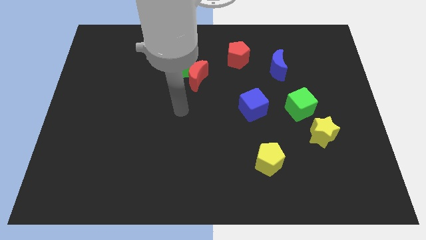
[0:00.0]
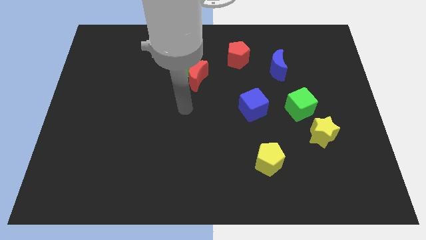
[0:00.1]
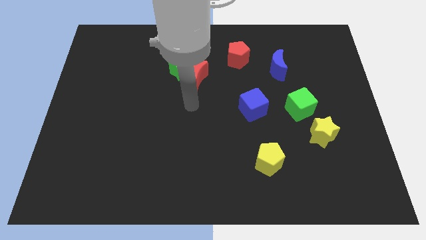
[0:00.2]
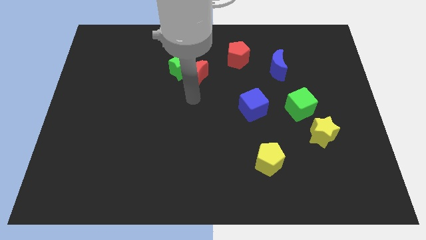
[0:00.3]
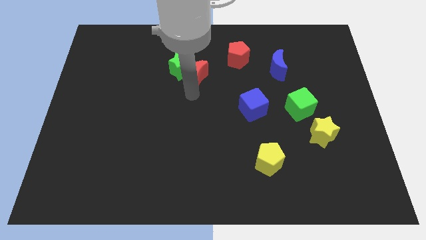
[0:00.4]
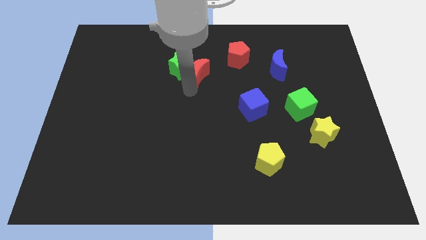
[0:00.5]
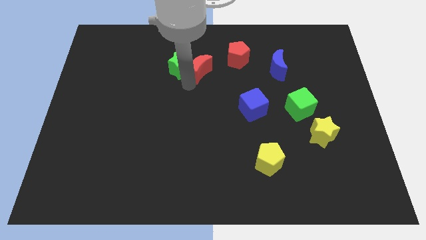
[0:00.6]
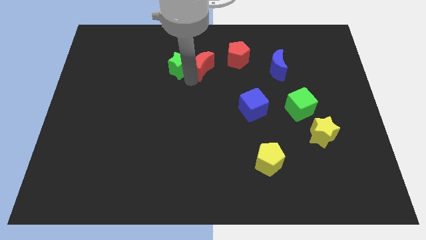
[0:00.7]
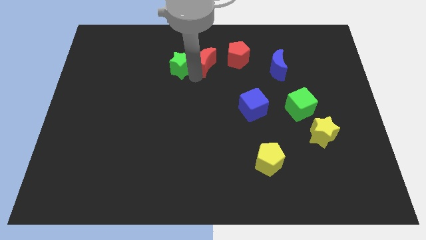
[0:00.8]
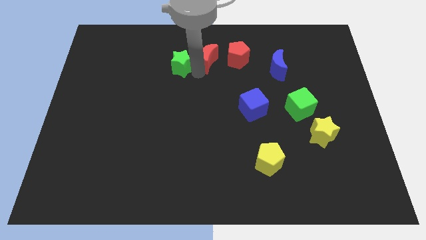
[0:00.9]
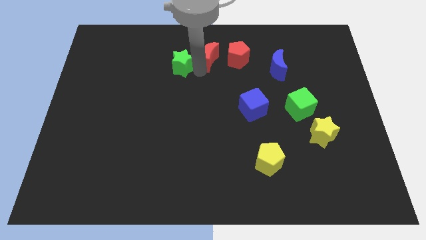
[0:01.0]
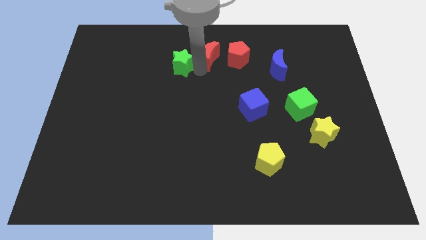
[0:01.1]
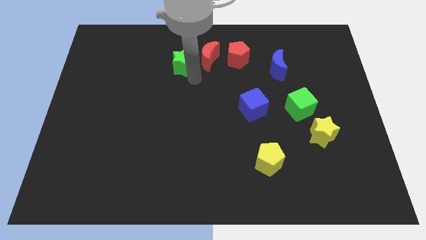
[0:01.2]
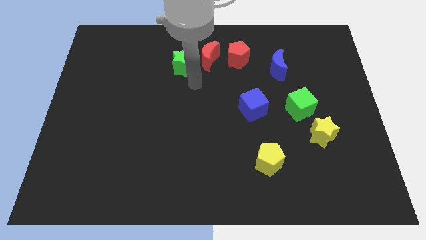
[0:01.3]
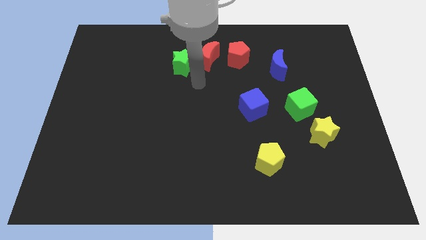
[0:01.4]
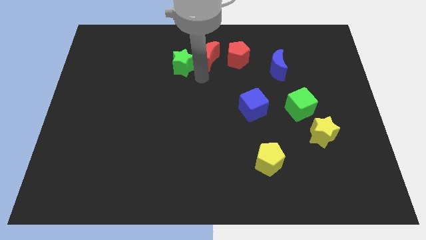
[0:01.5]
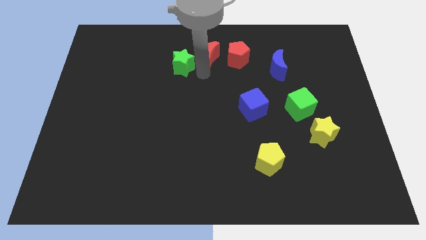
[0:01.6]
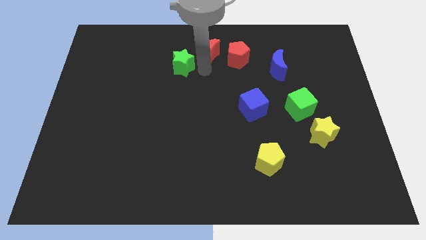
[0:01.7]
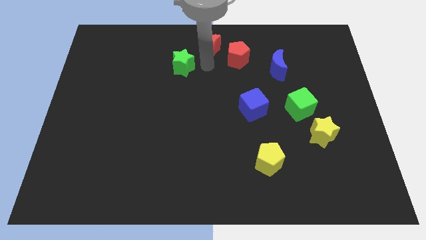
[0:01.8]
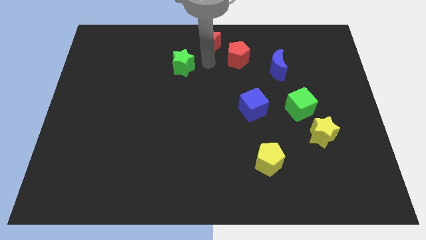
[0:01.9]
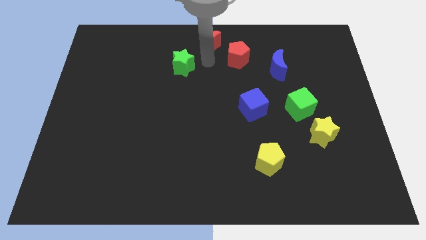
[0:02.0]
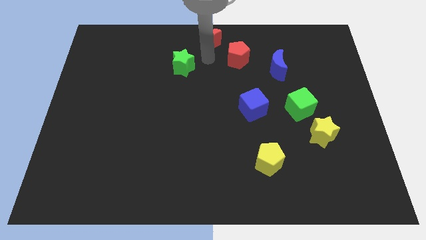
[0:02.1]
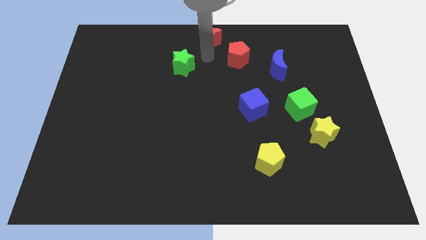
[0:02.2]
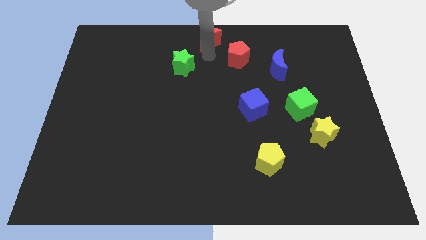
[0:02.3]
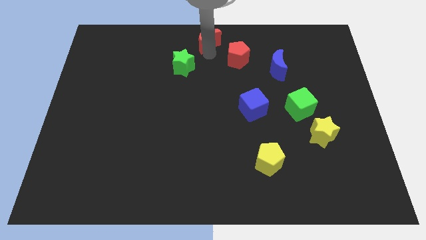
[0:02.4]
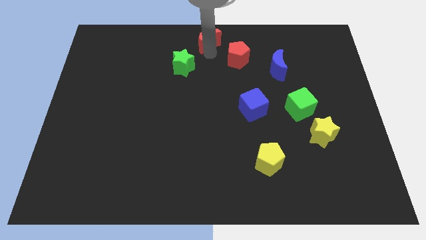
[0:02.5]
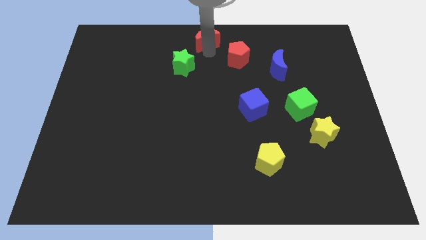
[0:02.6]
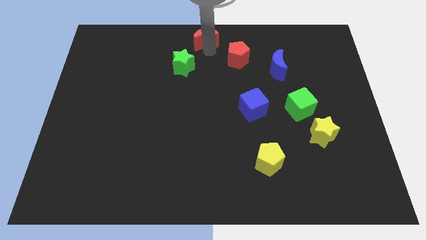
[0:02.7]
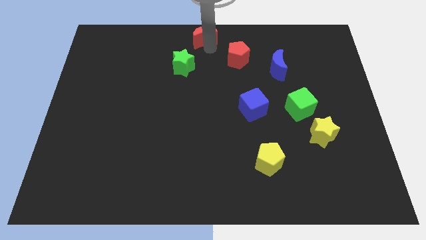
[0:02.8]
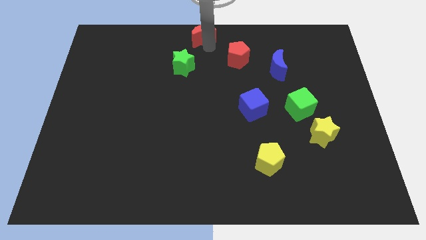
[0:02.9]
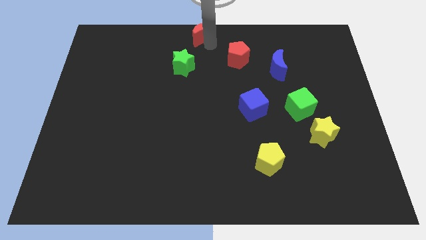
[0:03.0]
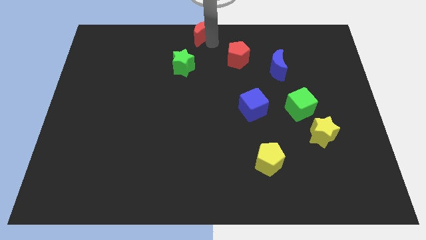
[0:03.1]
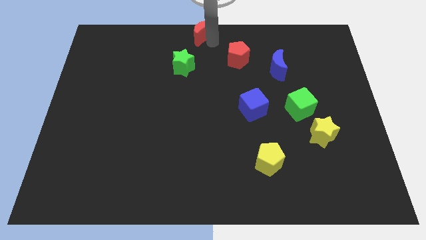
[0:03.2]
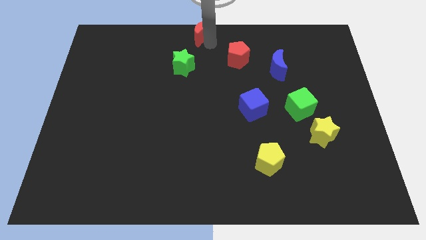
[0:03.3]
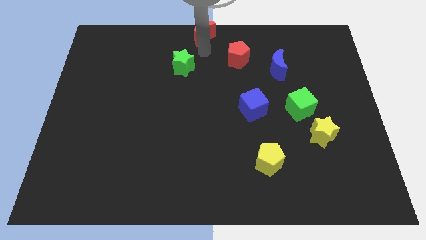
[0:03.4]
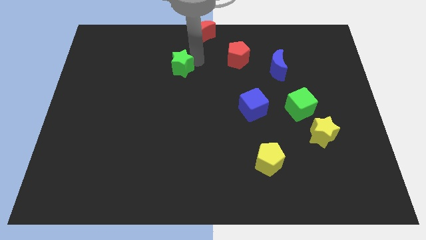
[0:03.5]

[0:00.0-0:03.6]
push the red crescent to the top center of the board

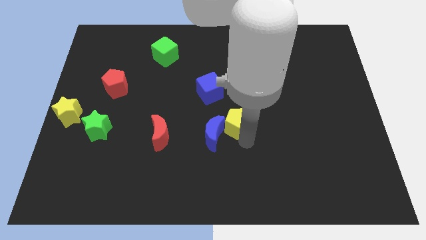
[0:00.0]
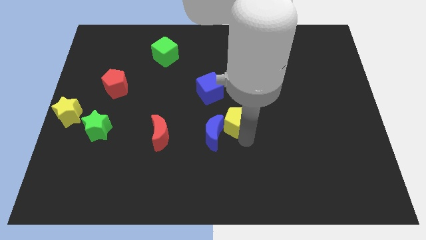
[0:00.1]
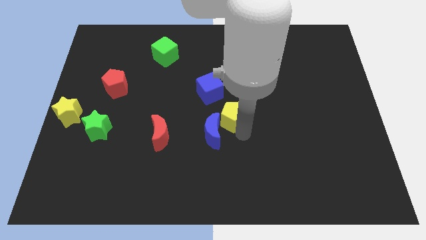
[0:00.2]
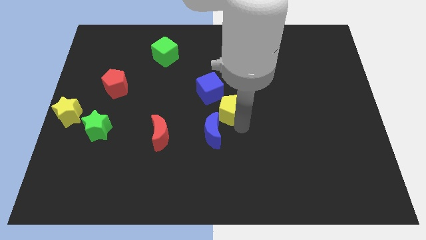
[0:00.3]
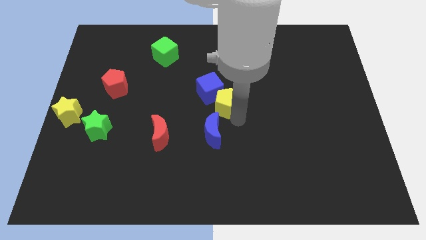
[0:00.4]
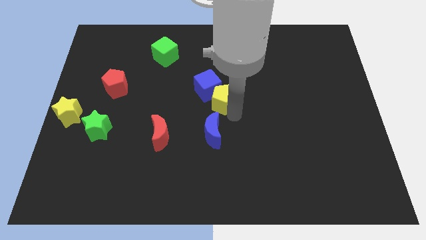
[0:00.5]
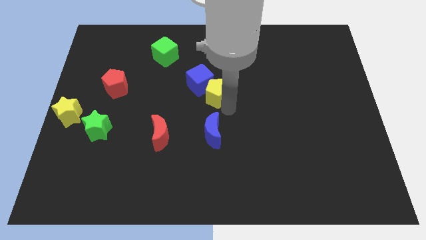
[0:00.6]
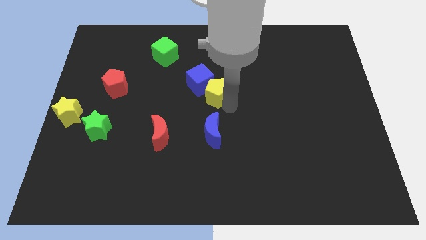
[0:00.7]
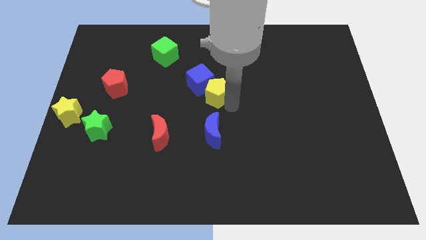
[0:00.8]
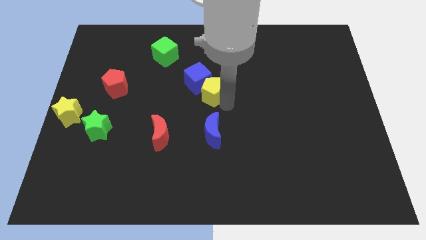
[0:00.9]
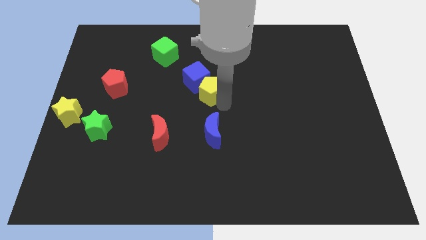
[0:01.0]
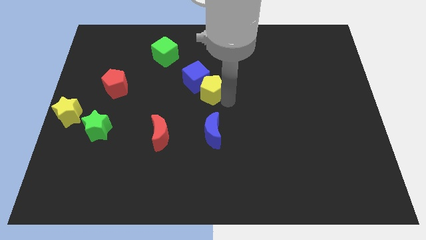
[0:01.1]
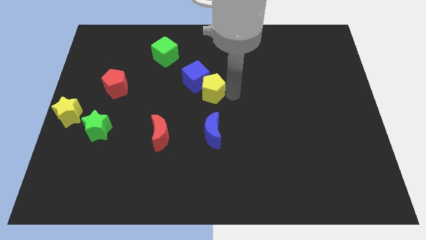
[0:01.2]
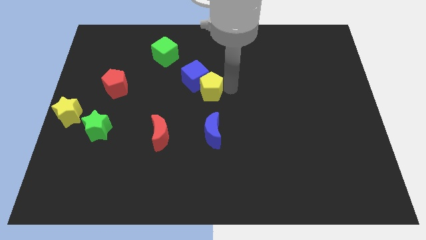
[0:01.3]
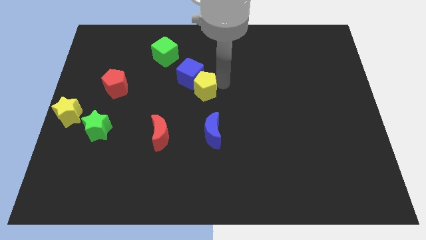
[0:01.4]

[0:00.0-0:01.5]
push the yellow pentagon into the blue cube

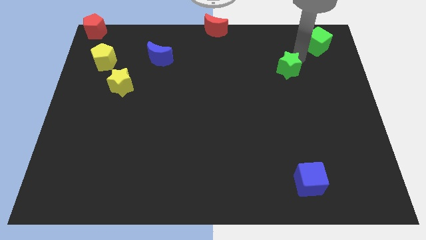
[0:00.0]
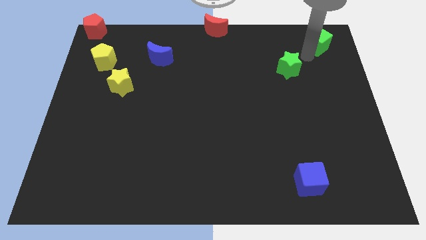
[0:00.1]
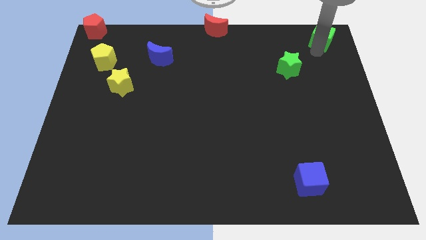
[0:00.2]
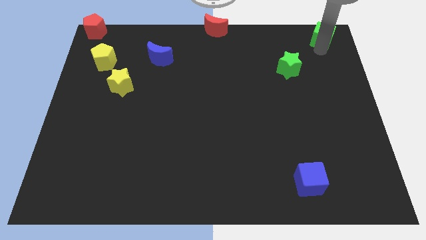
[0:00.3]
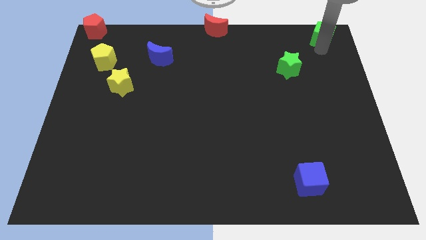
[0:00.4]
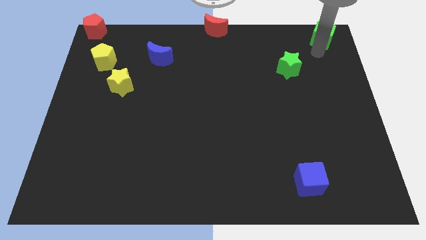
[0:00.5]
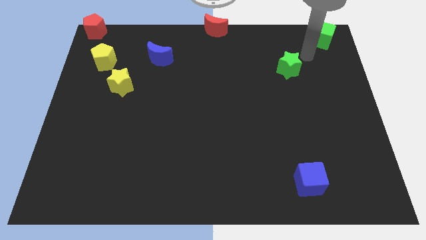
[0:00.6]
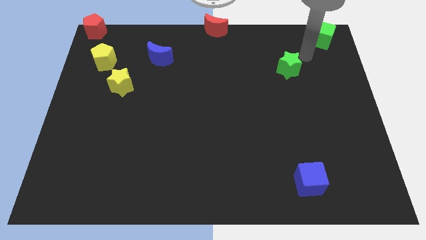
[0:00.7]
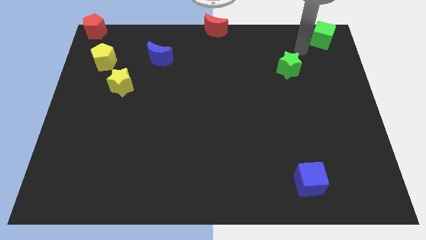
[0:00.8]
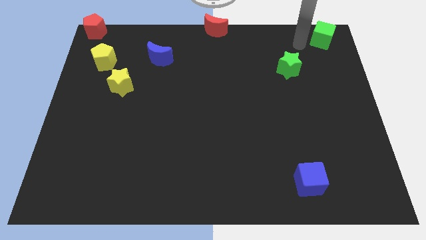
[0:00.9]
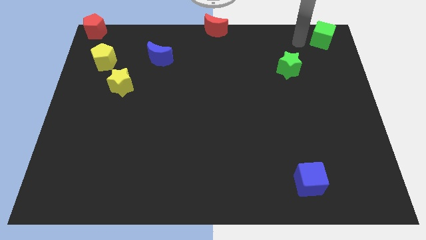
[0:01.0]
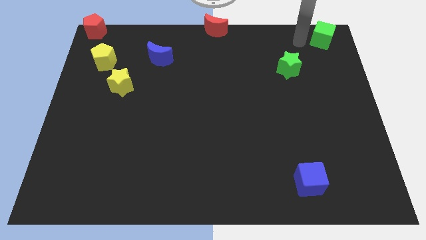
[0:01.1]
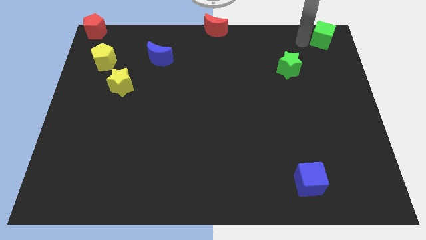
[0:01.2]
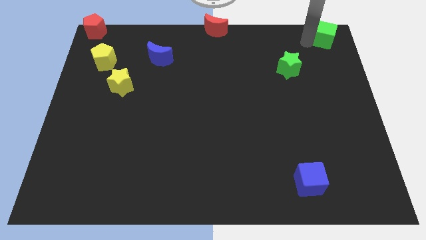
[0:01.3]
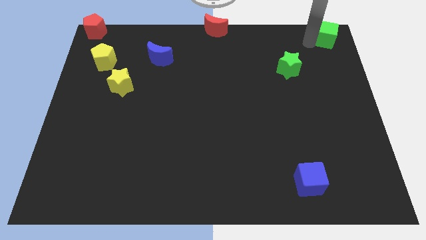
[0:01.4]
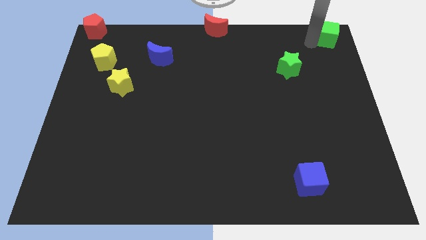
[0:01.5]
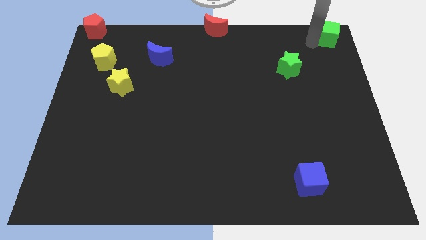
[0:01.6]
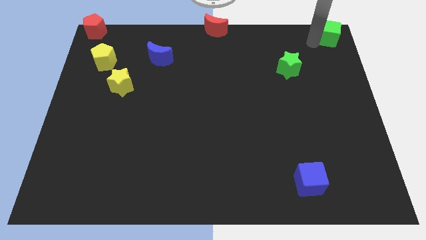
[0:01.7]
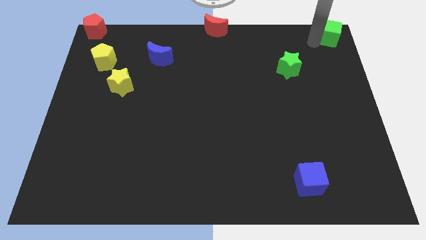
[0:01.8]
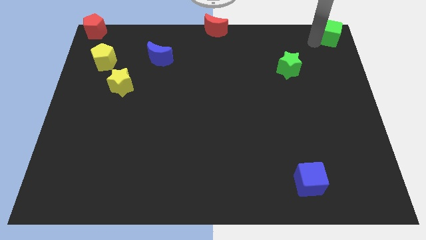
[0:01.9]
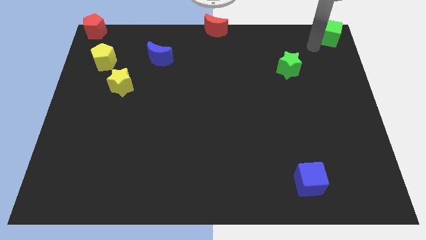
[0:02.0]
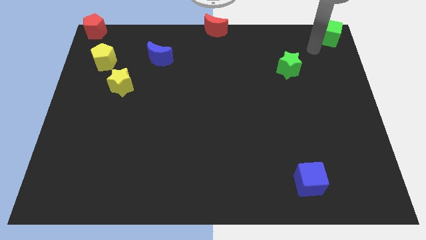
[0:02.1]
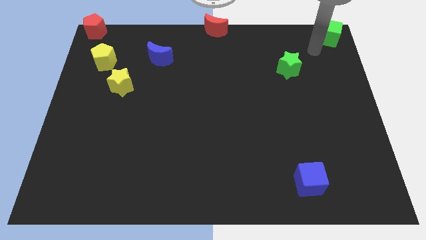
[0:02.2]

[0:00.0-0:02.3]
move the green cube to the top right corner of the board

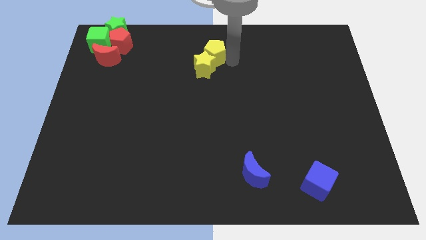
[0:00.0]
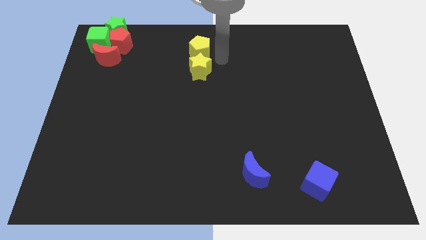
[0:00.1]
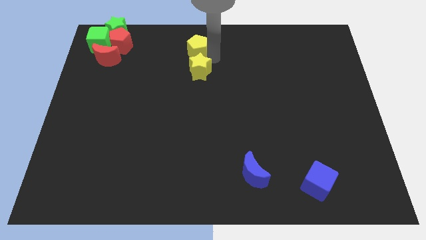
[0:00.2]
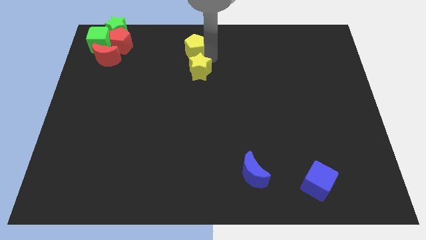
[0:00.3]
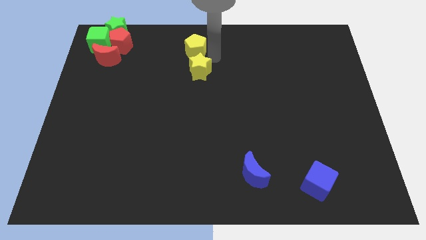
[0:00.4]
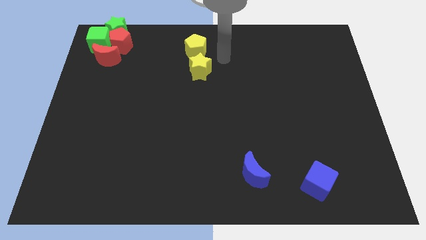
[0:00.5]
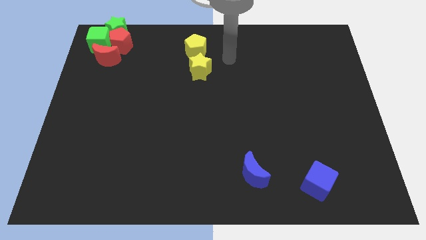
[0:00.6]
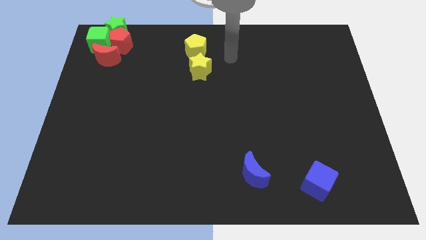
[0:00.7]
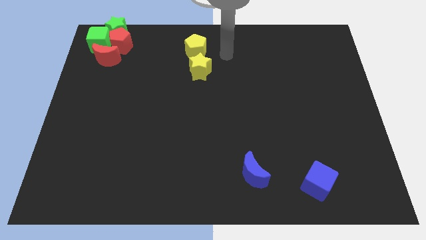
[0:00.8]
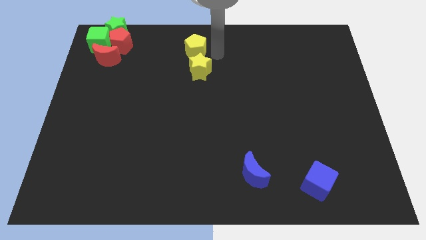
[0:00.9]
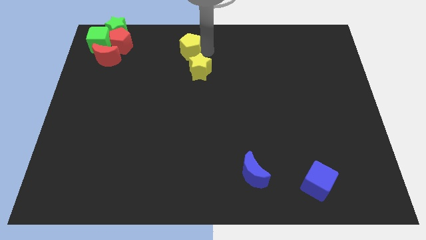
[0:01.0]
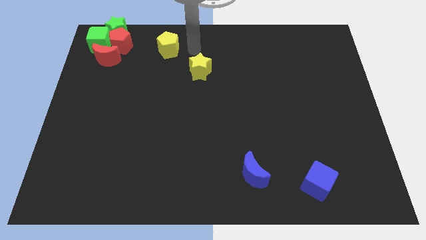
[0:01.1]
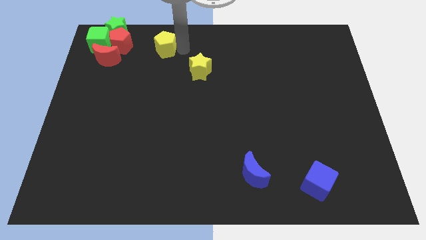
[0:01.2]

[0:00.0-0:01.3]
separate the yellow pentagon from the yellow star

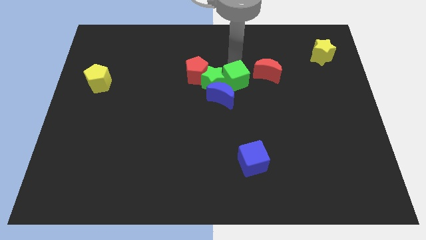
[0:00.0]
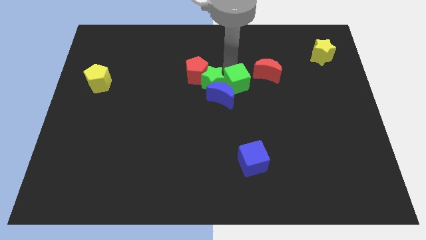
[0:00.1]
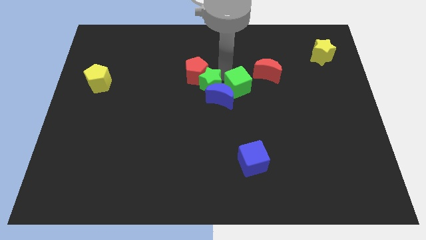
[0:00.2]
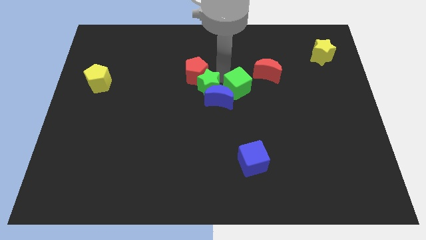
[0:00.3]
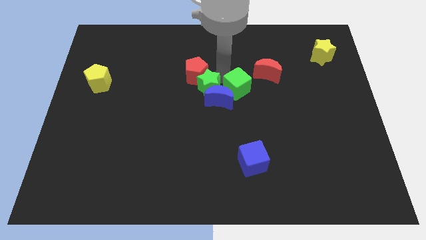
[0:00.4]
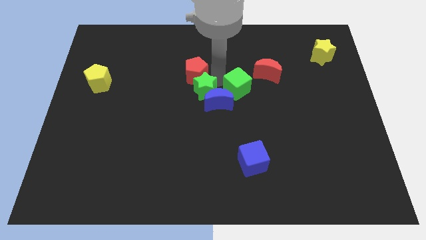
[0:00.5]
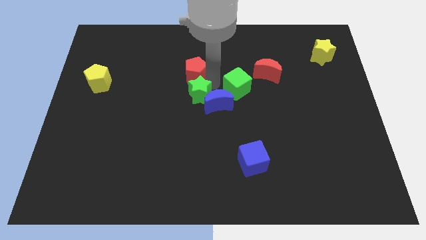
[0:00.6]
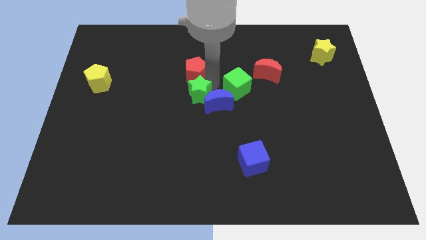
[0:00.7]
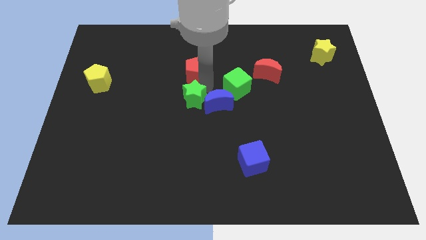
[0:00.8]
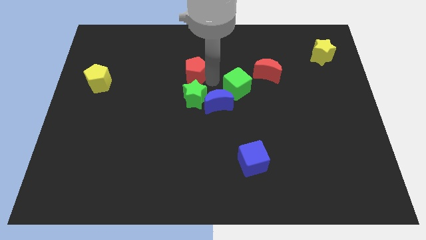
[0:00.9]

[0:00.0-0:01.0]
move the green star away from the green cube
